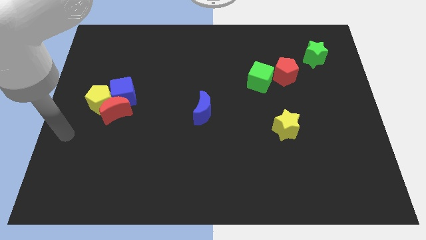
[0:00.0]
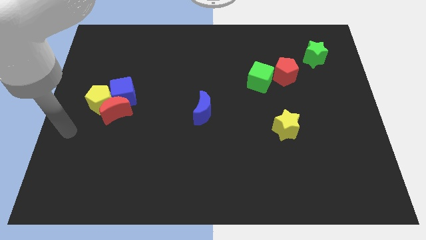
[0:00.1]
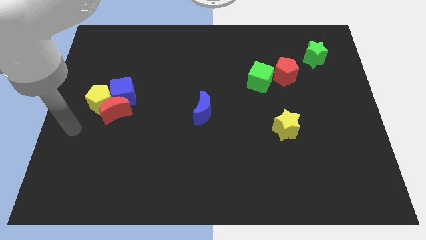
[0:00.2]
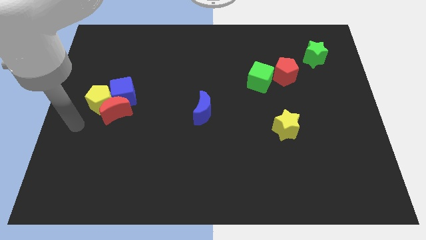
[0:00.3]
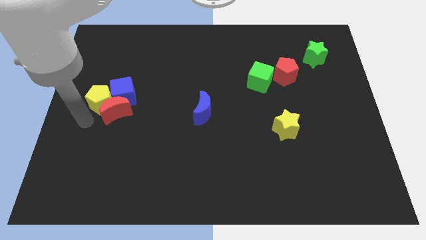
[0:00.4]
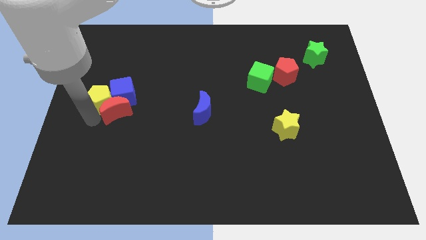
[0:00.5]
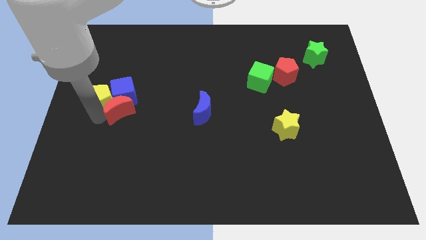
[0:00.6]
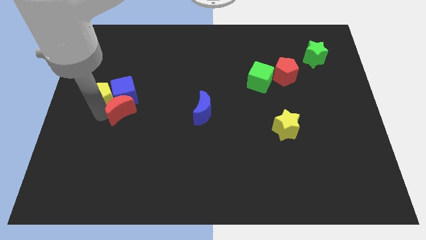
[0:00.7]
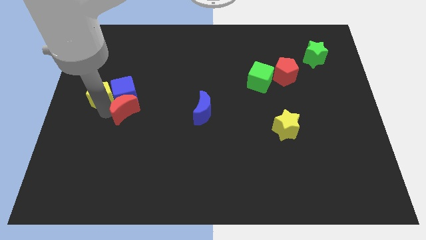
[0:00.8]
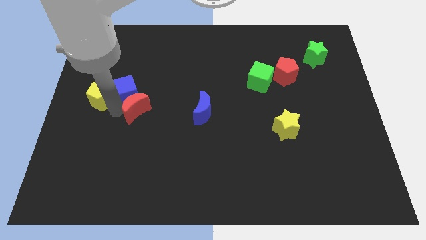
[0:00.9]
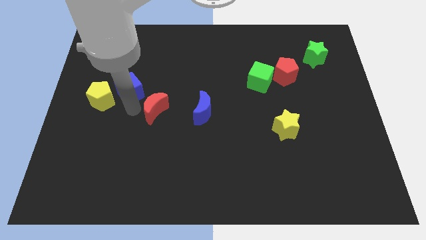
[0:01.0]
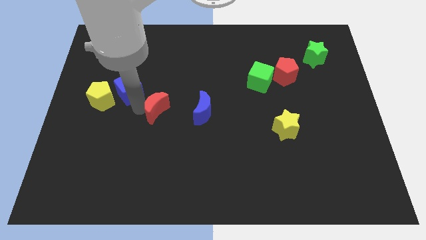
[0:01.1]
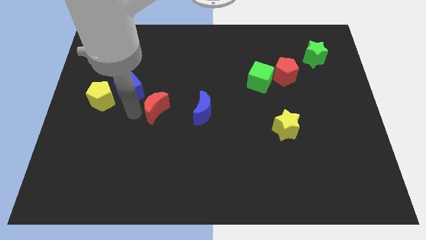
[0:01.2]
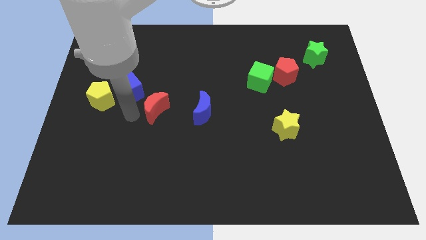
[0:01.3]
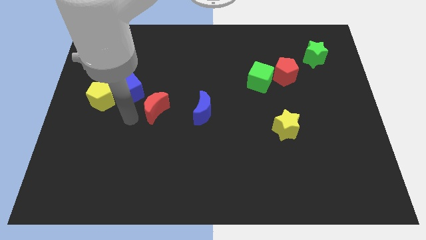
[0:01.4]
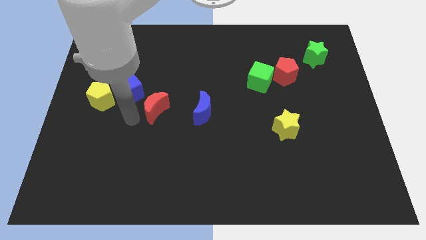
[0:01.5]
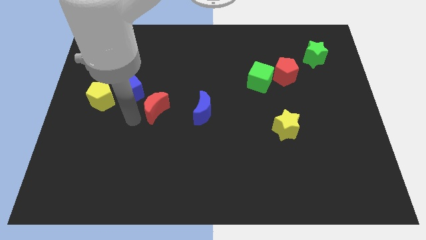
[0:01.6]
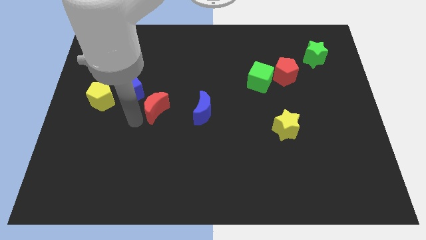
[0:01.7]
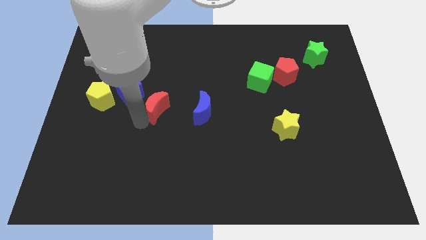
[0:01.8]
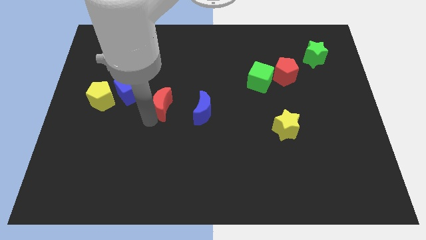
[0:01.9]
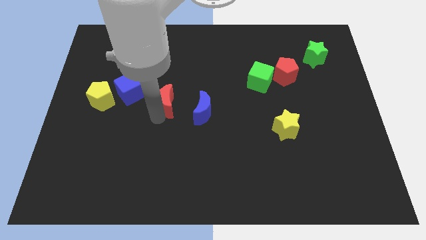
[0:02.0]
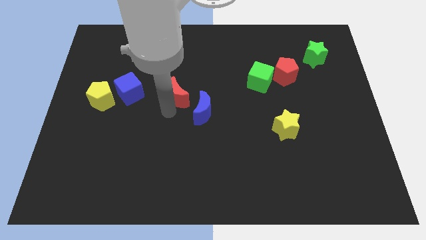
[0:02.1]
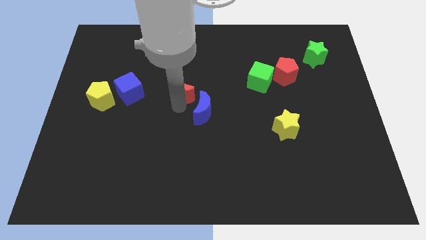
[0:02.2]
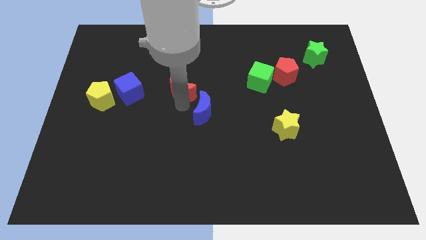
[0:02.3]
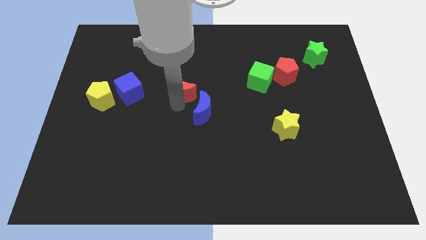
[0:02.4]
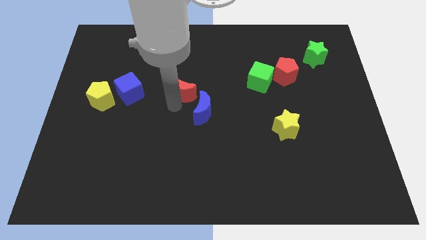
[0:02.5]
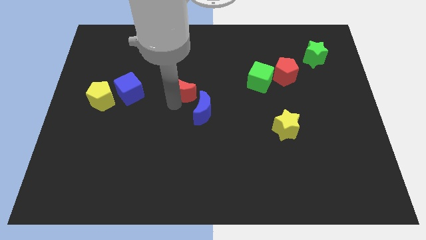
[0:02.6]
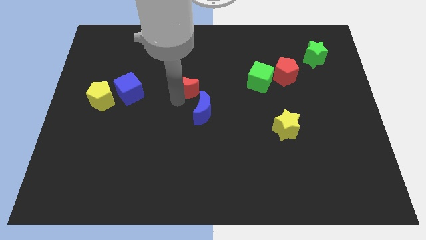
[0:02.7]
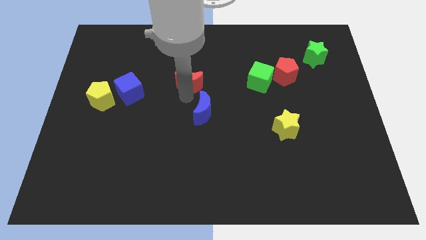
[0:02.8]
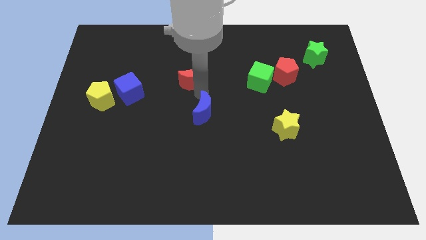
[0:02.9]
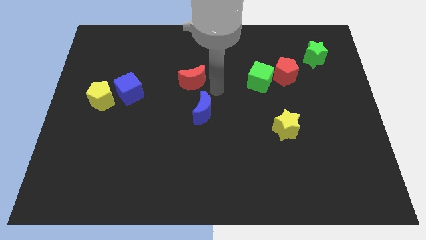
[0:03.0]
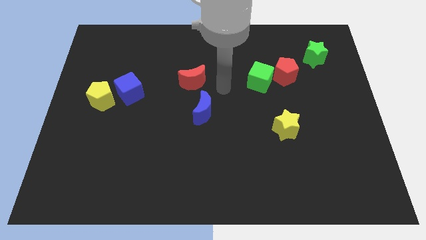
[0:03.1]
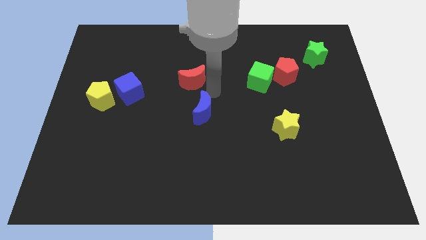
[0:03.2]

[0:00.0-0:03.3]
push the red moon towards the top of blue crescent

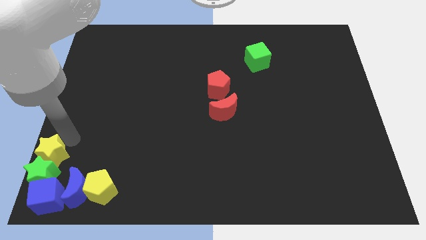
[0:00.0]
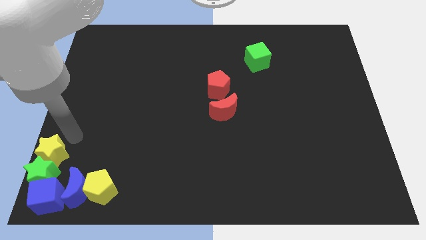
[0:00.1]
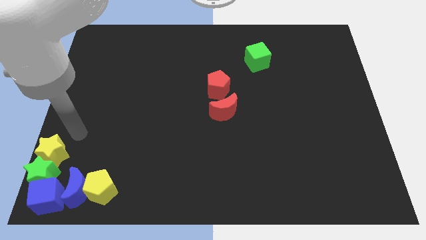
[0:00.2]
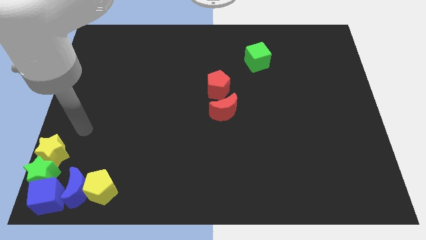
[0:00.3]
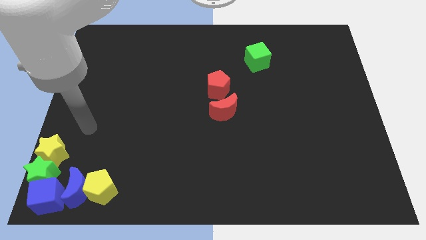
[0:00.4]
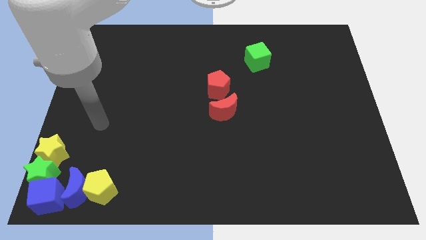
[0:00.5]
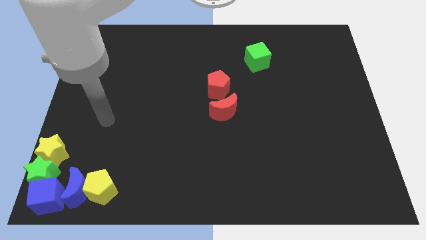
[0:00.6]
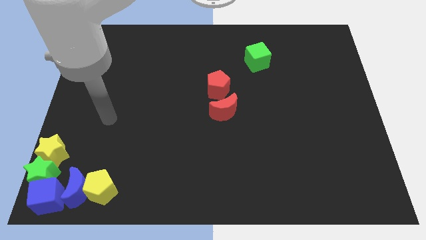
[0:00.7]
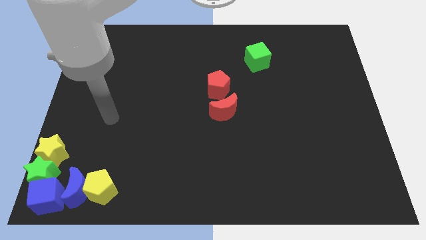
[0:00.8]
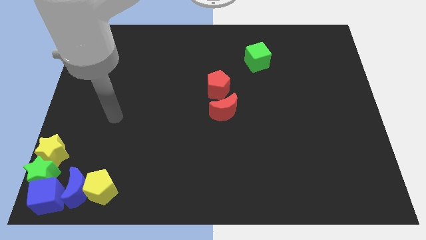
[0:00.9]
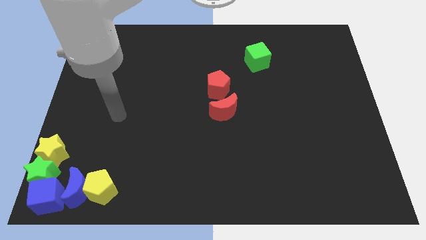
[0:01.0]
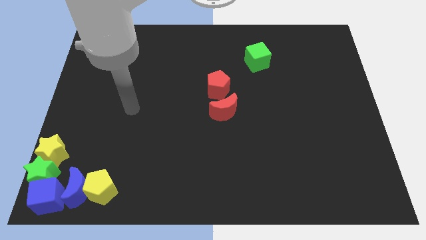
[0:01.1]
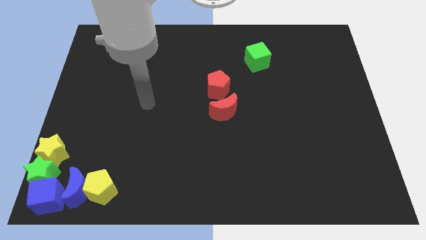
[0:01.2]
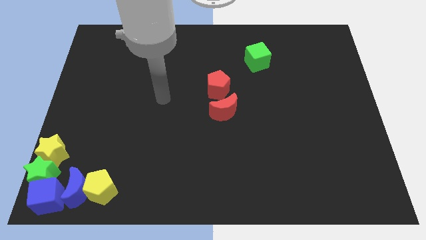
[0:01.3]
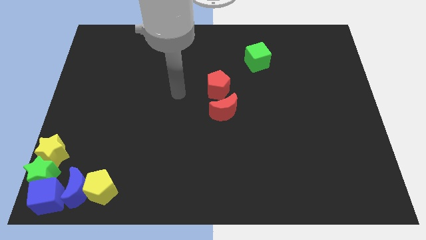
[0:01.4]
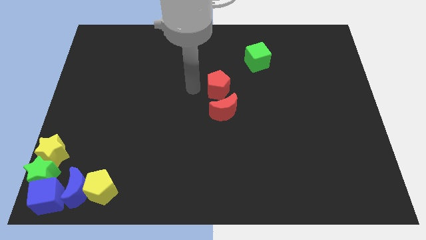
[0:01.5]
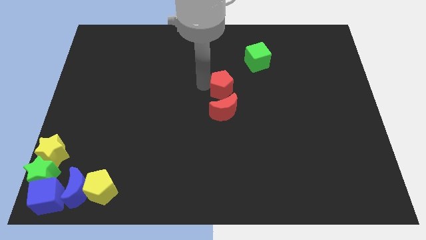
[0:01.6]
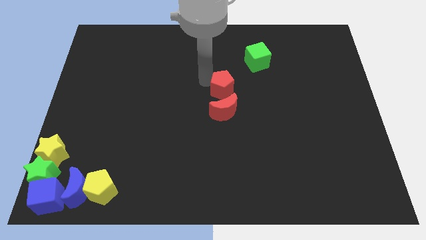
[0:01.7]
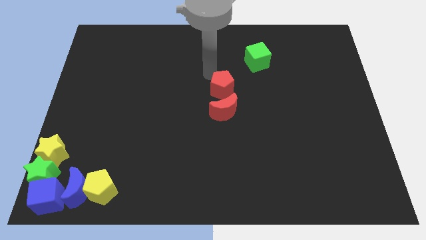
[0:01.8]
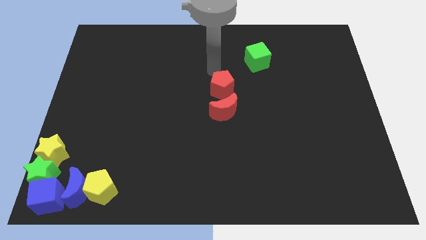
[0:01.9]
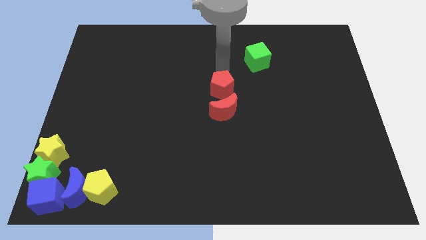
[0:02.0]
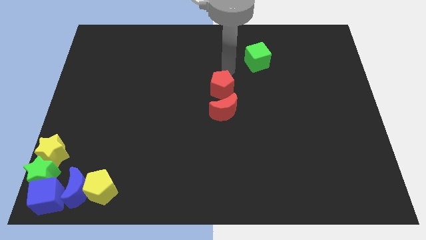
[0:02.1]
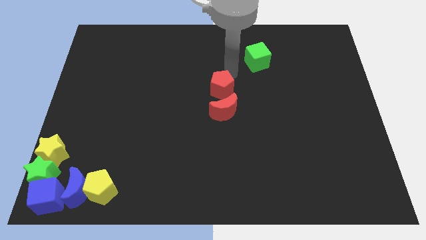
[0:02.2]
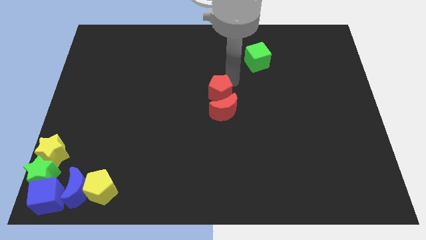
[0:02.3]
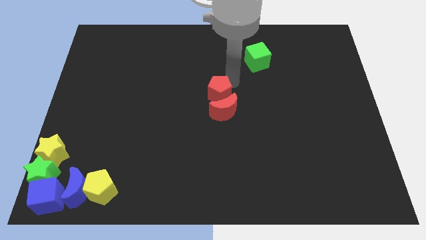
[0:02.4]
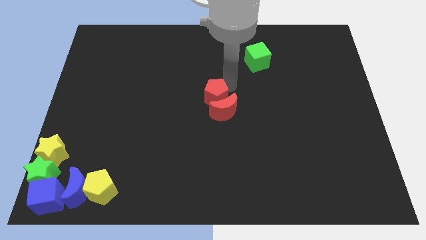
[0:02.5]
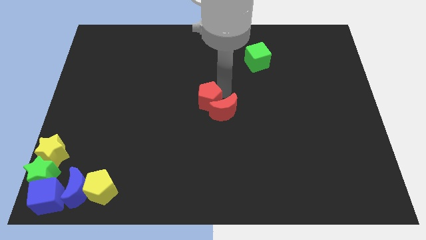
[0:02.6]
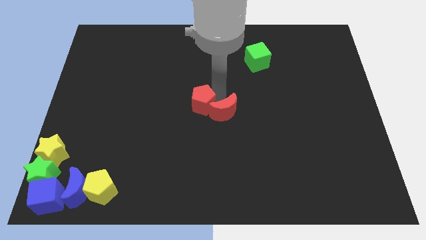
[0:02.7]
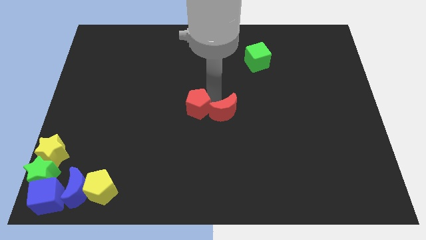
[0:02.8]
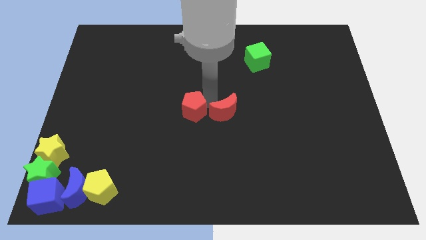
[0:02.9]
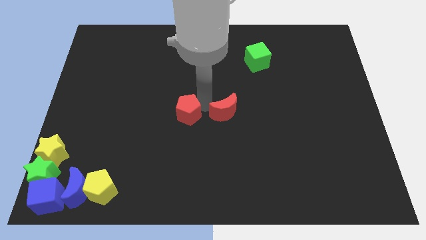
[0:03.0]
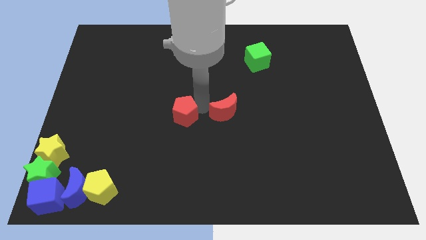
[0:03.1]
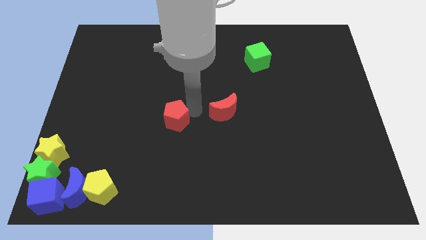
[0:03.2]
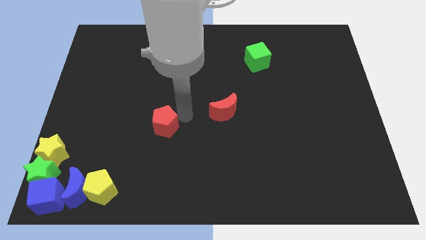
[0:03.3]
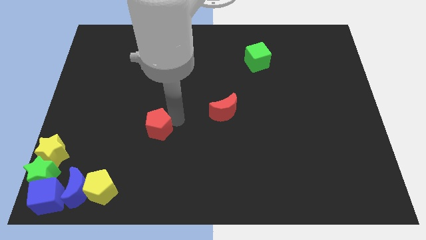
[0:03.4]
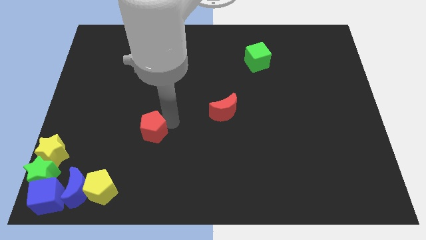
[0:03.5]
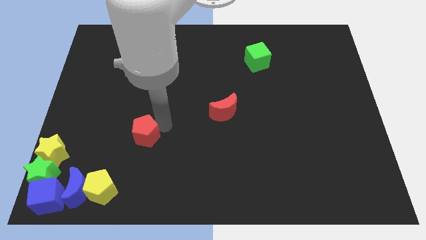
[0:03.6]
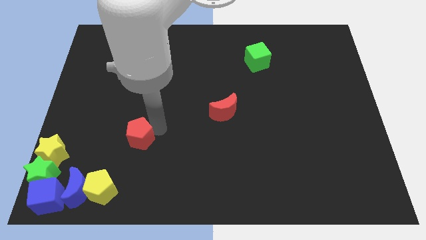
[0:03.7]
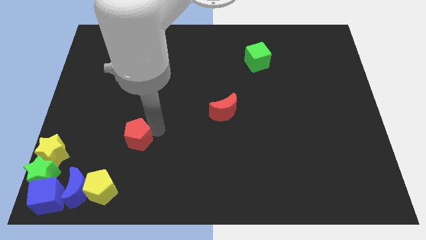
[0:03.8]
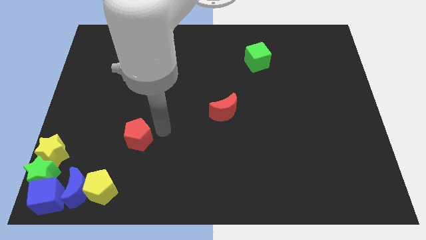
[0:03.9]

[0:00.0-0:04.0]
push the red pentagon towards the group of blocks

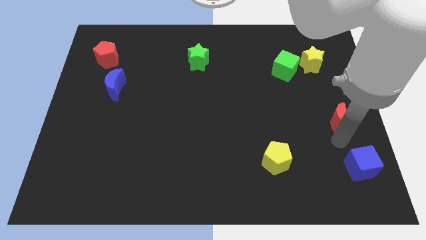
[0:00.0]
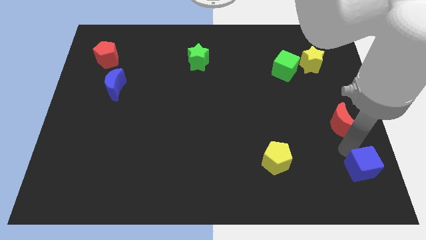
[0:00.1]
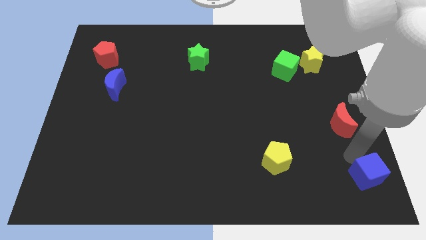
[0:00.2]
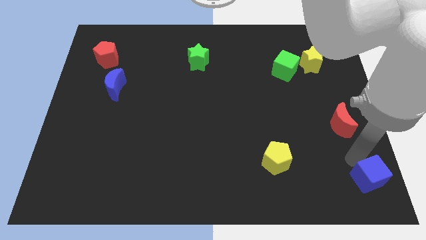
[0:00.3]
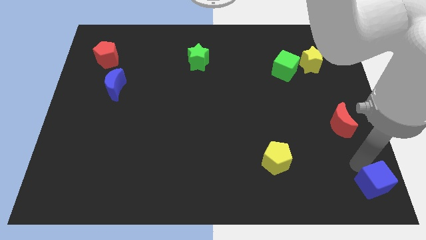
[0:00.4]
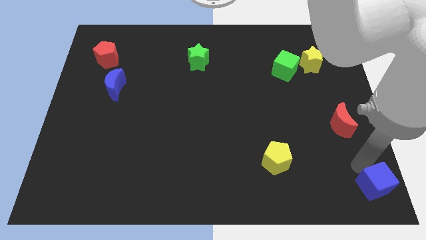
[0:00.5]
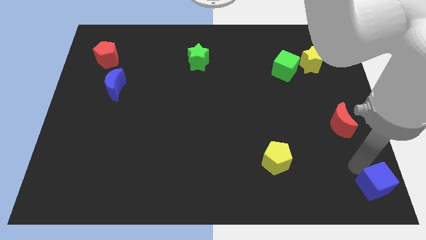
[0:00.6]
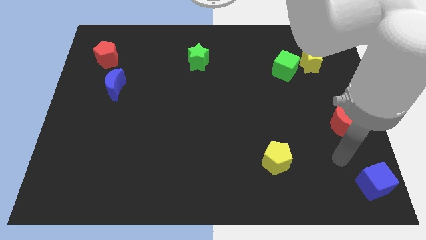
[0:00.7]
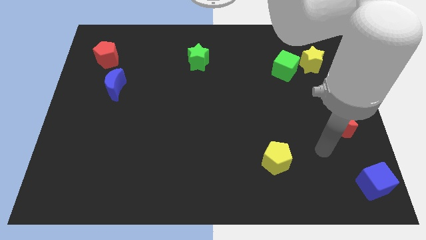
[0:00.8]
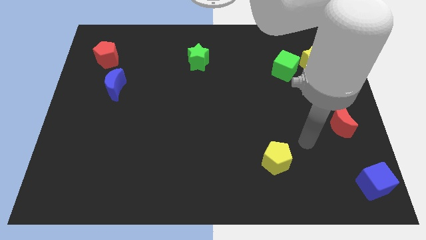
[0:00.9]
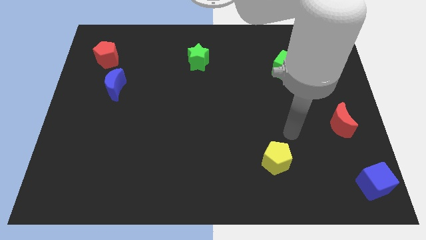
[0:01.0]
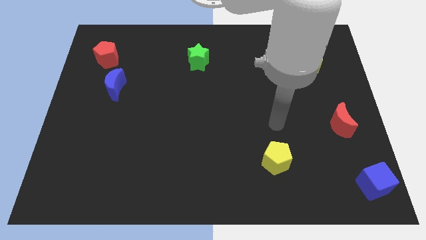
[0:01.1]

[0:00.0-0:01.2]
push the blue cube to the bottom right of the board

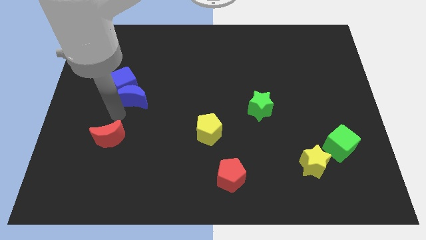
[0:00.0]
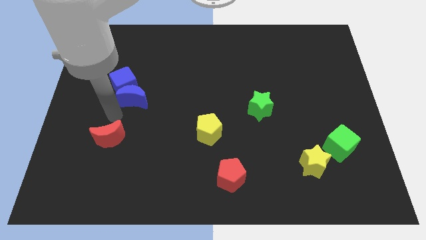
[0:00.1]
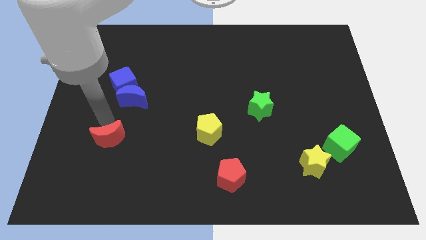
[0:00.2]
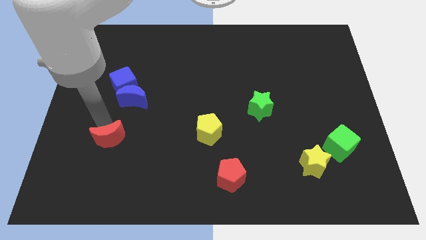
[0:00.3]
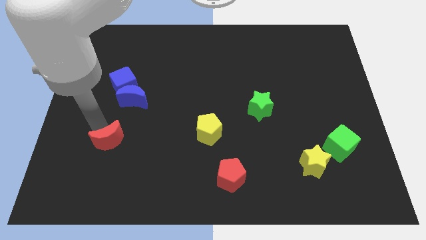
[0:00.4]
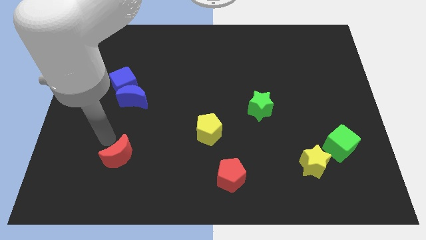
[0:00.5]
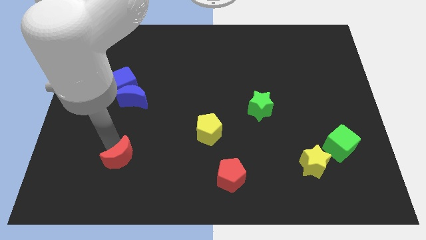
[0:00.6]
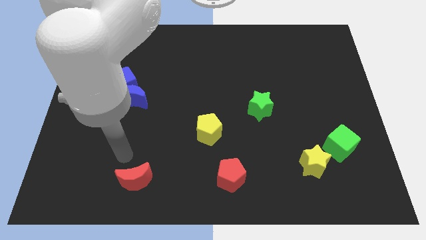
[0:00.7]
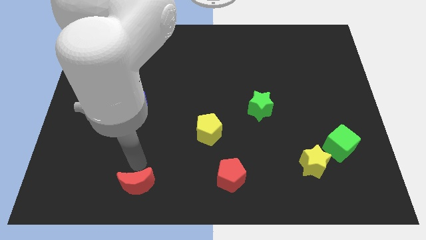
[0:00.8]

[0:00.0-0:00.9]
place red moon to the left of red pentagon
